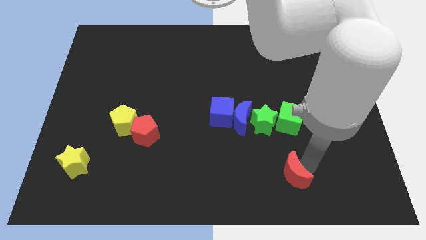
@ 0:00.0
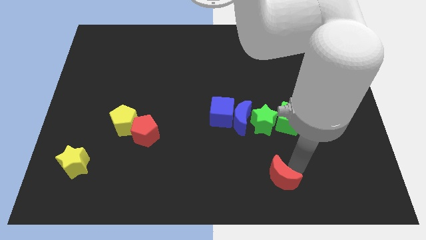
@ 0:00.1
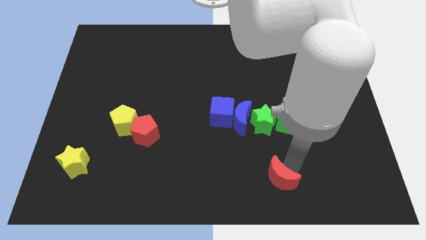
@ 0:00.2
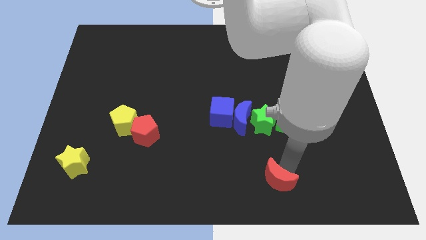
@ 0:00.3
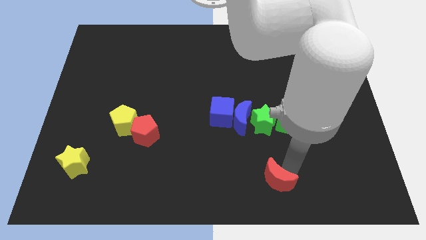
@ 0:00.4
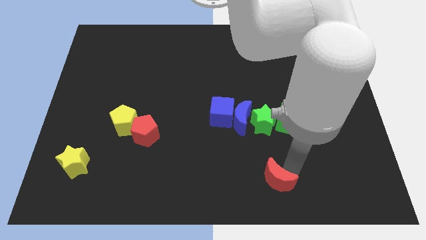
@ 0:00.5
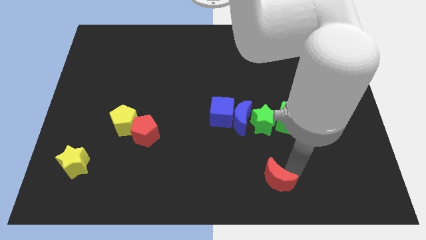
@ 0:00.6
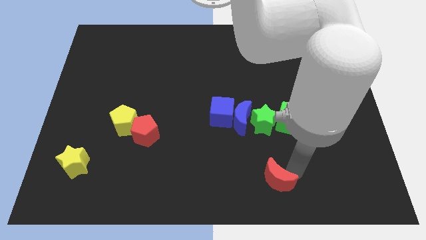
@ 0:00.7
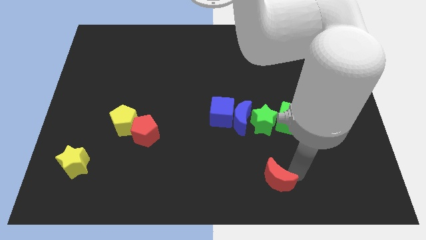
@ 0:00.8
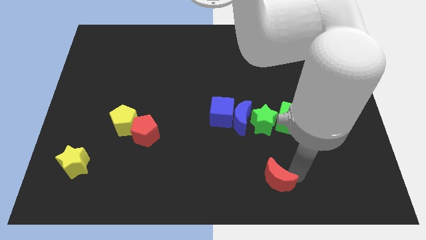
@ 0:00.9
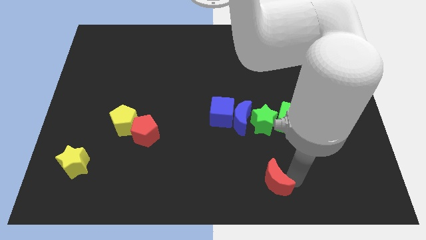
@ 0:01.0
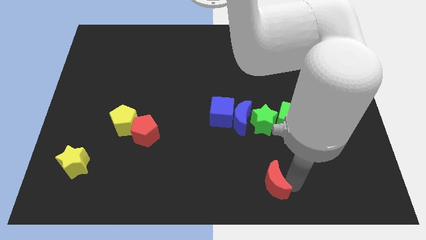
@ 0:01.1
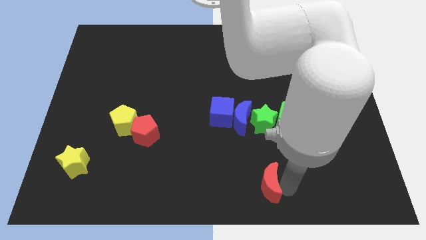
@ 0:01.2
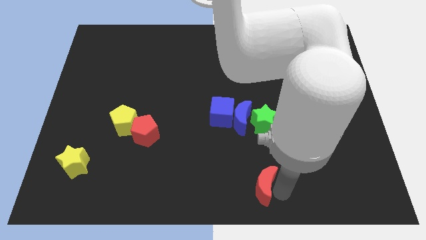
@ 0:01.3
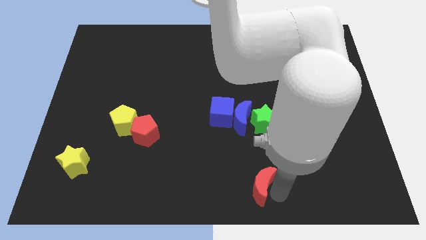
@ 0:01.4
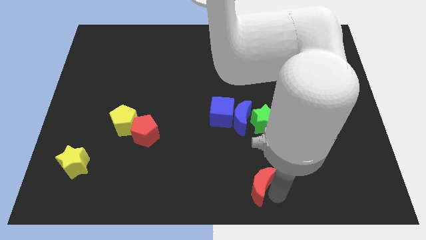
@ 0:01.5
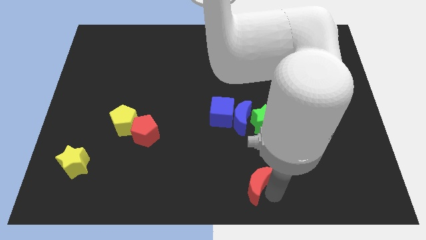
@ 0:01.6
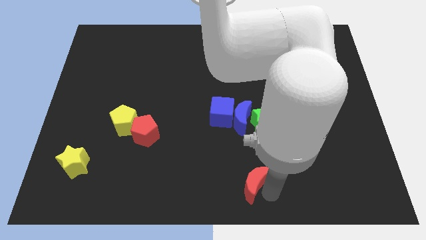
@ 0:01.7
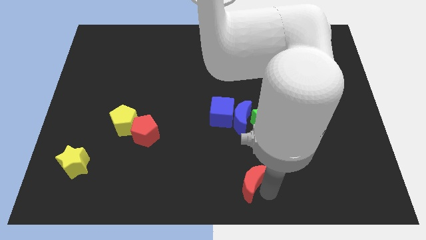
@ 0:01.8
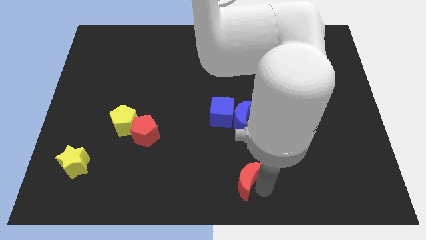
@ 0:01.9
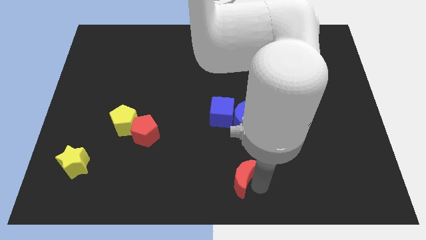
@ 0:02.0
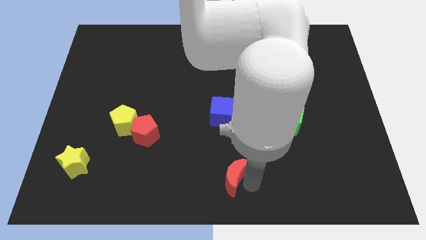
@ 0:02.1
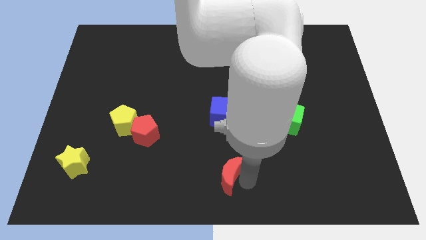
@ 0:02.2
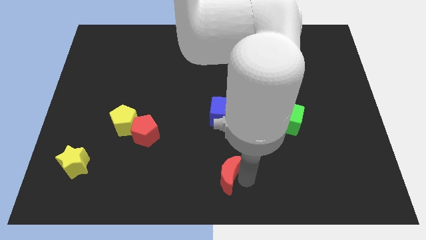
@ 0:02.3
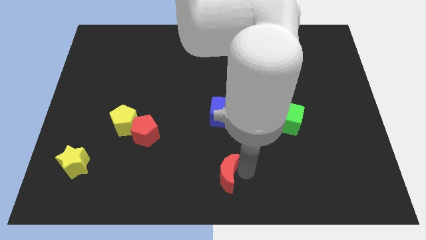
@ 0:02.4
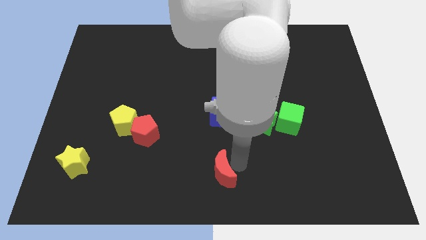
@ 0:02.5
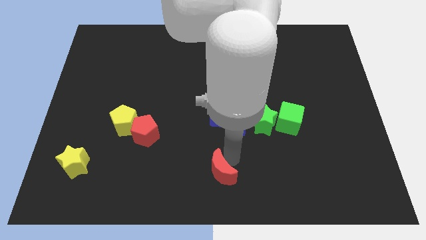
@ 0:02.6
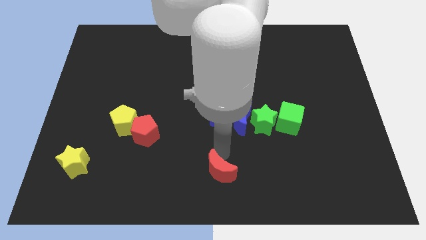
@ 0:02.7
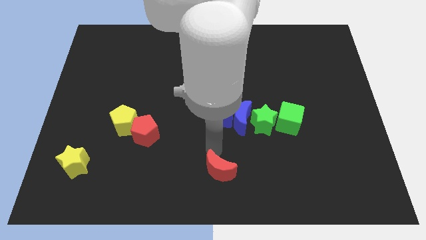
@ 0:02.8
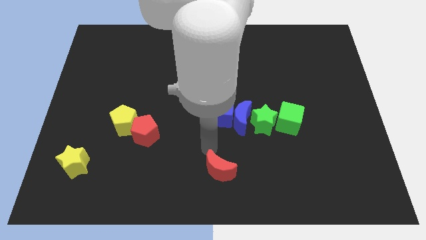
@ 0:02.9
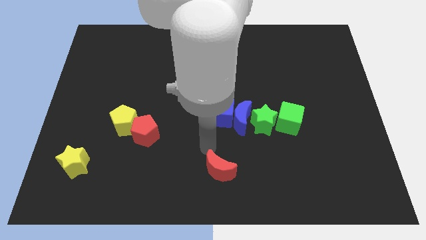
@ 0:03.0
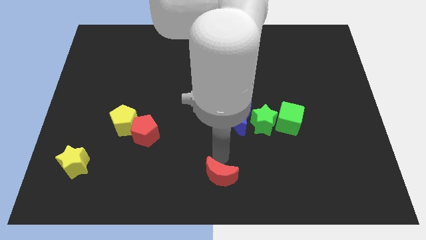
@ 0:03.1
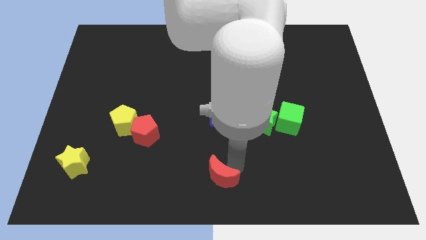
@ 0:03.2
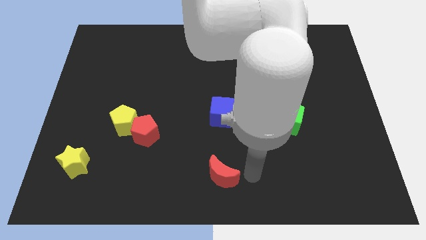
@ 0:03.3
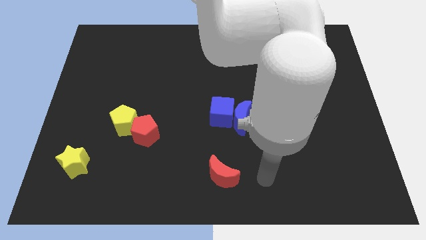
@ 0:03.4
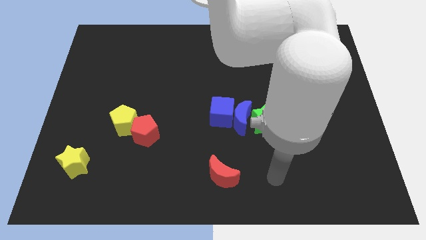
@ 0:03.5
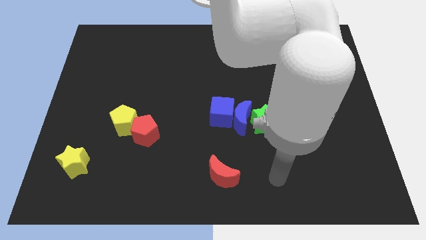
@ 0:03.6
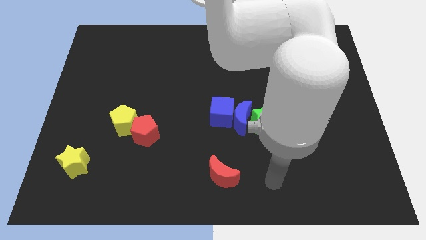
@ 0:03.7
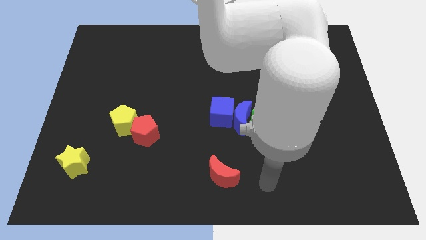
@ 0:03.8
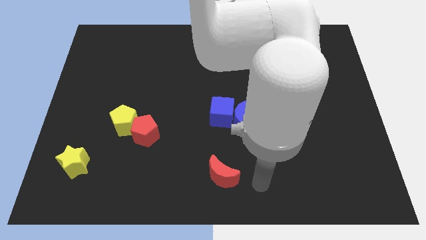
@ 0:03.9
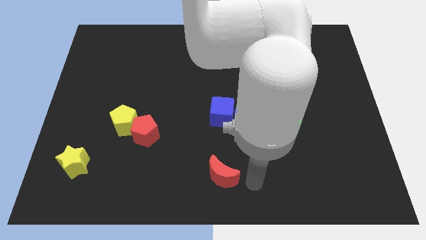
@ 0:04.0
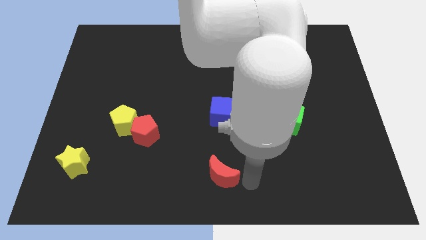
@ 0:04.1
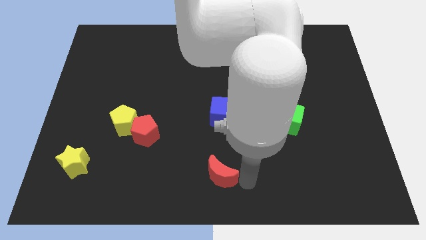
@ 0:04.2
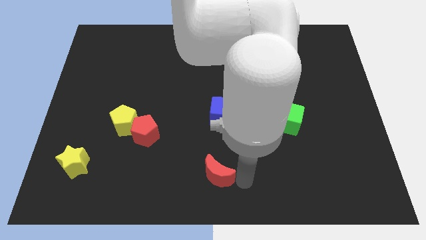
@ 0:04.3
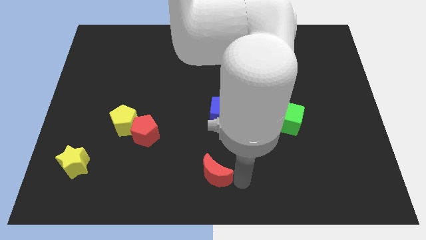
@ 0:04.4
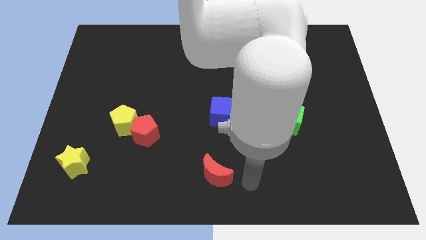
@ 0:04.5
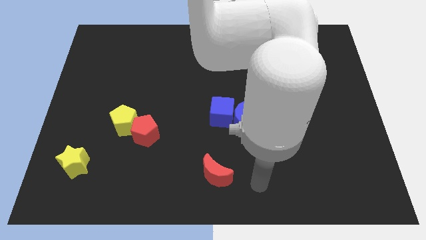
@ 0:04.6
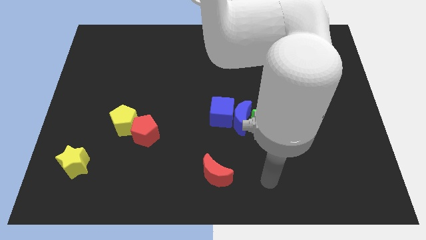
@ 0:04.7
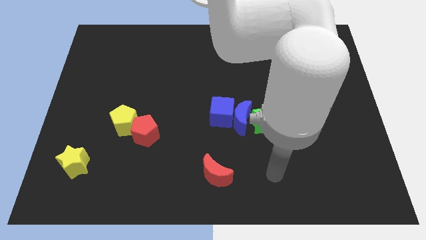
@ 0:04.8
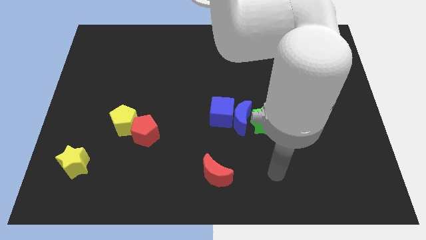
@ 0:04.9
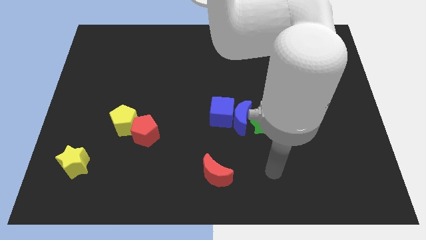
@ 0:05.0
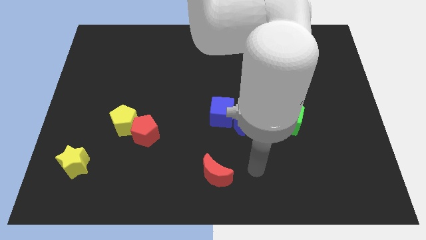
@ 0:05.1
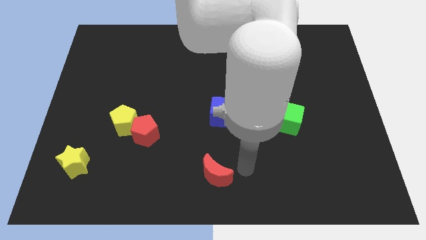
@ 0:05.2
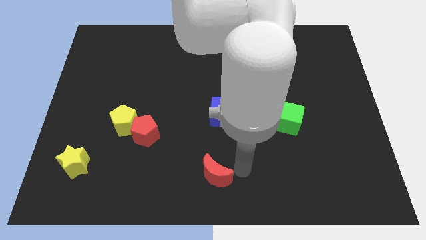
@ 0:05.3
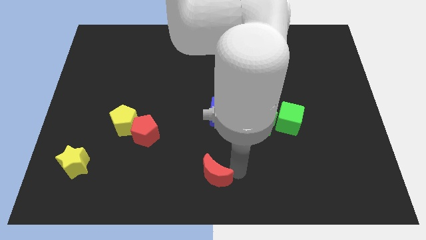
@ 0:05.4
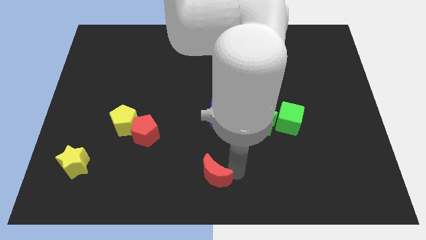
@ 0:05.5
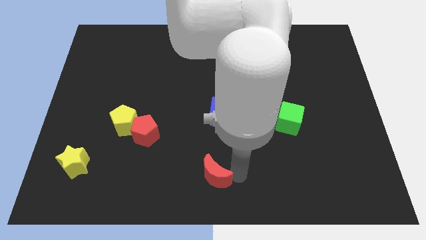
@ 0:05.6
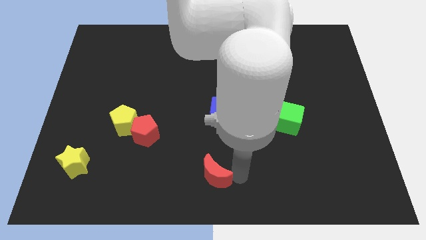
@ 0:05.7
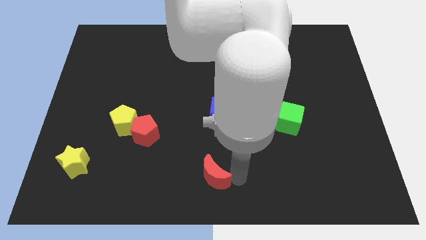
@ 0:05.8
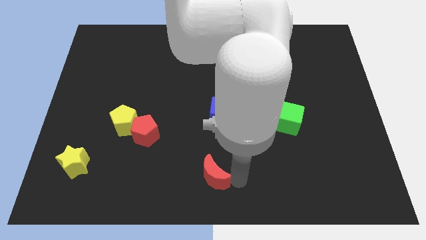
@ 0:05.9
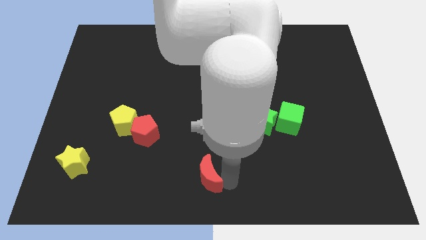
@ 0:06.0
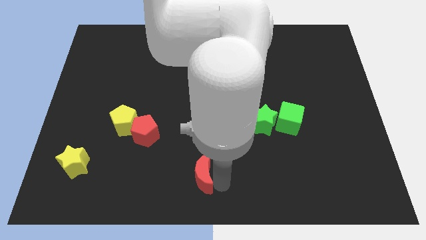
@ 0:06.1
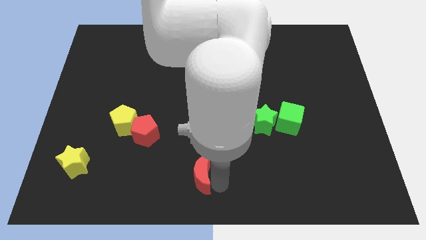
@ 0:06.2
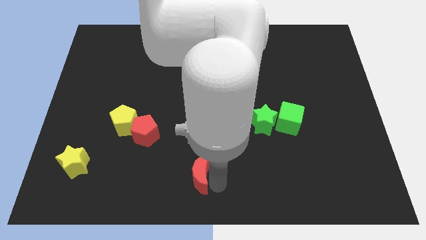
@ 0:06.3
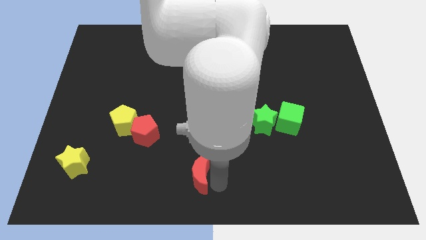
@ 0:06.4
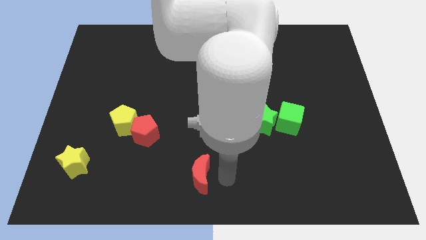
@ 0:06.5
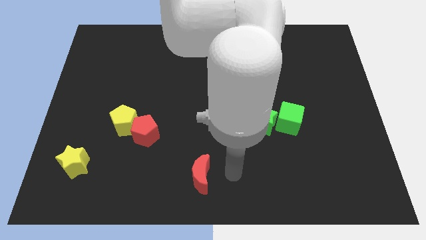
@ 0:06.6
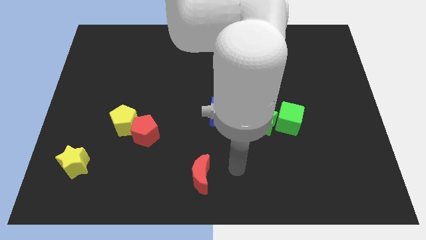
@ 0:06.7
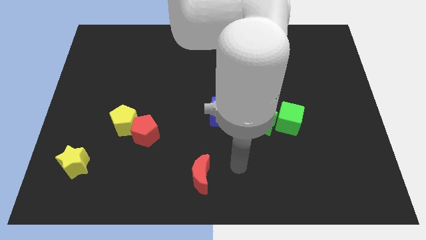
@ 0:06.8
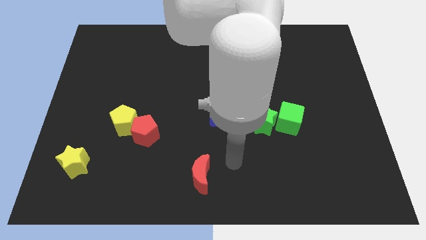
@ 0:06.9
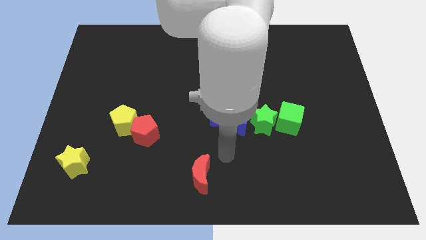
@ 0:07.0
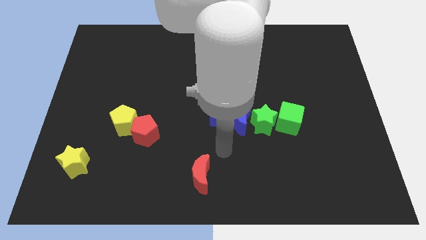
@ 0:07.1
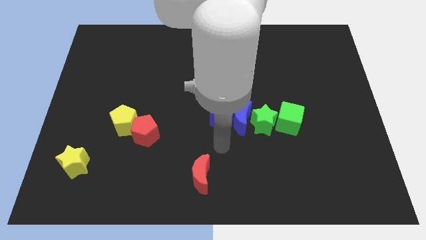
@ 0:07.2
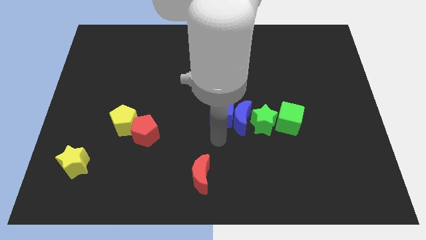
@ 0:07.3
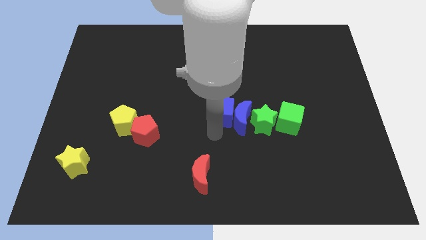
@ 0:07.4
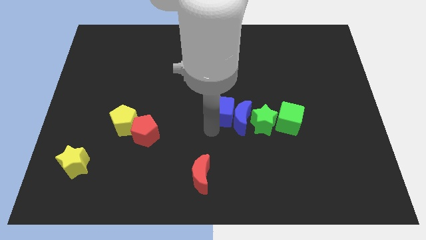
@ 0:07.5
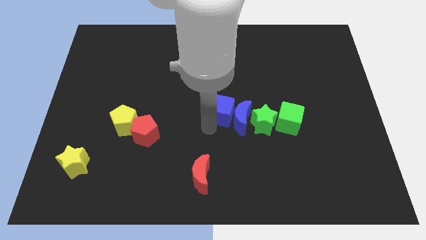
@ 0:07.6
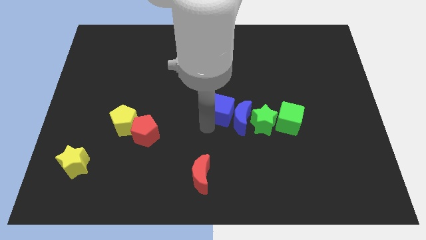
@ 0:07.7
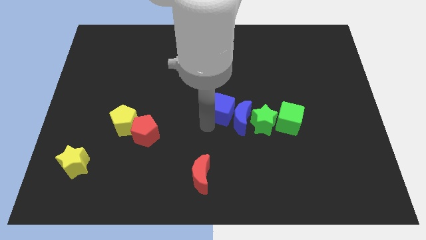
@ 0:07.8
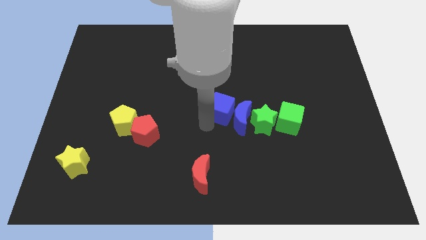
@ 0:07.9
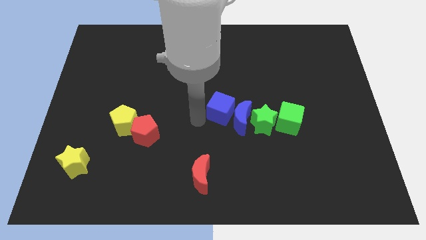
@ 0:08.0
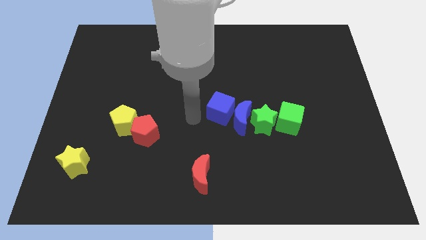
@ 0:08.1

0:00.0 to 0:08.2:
move the red moon to the bottom center

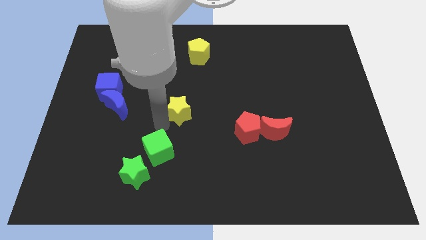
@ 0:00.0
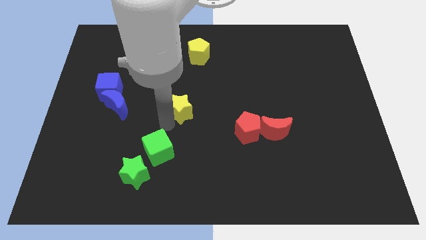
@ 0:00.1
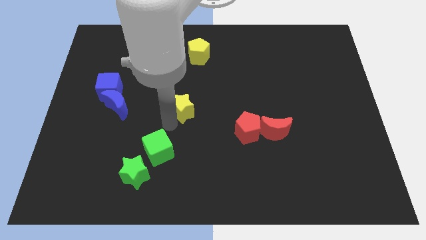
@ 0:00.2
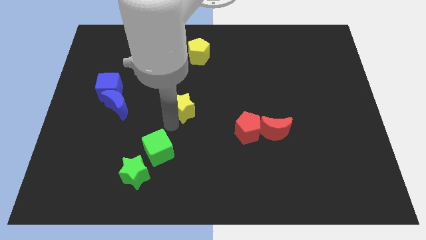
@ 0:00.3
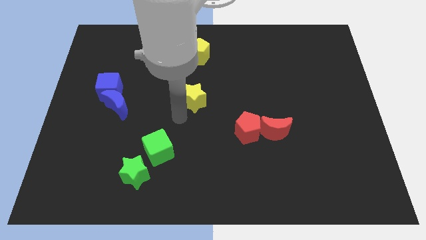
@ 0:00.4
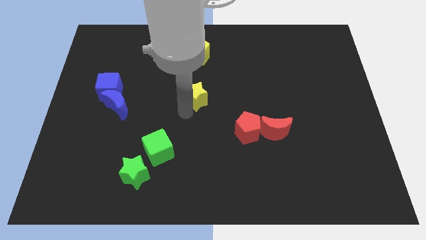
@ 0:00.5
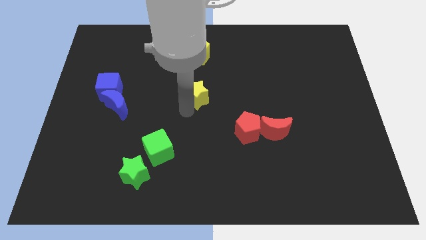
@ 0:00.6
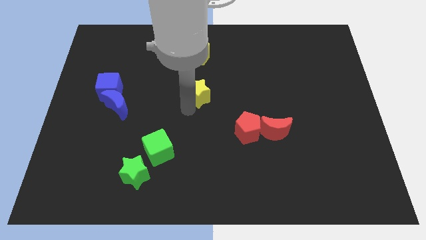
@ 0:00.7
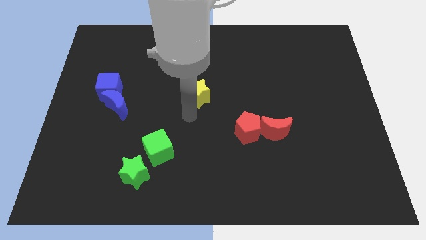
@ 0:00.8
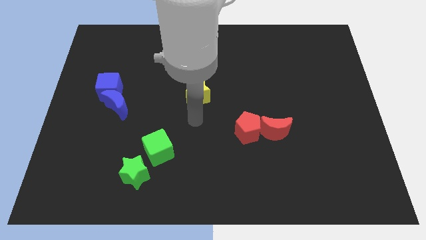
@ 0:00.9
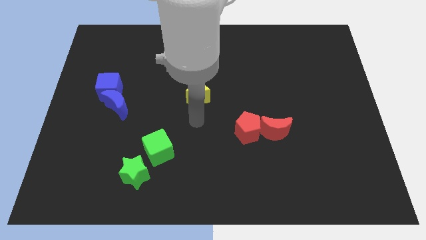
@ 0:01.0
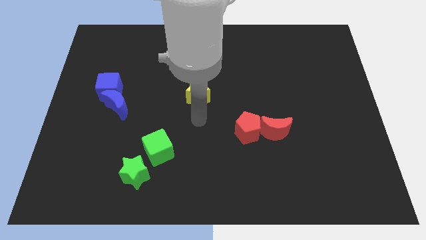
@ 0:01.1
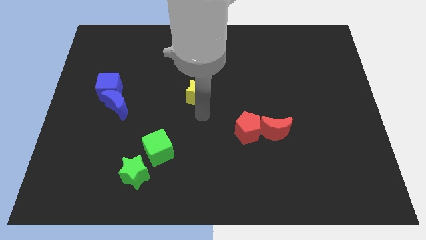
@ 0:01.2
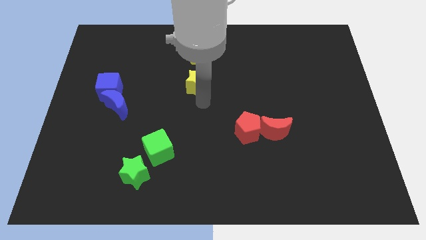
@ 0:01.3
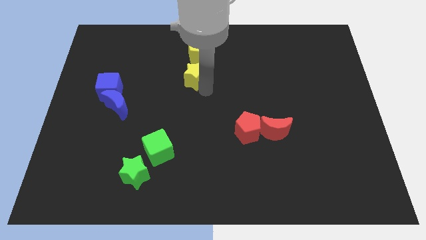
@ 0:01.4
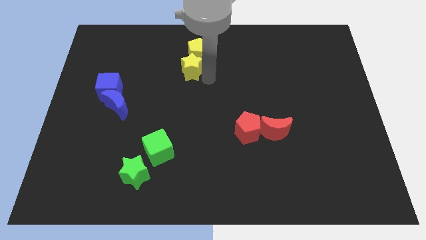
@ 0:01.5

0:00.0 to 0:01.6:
move the yellow star to the bottom of the yellow pentagon
